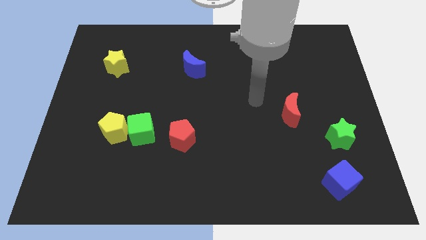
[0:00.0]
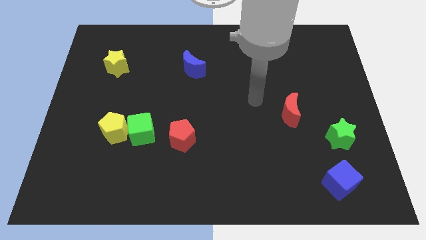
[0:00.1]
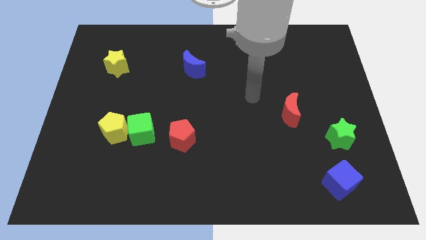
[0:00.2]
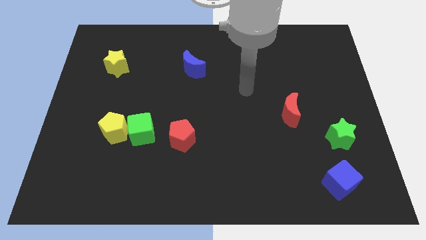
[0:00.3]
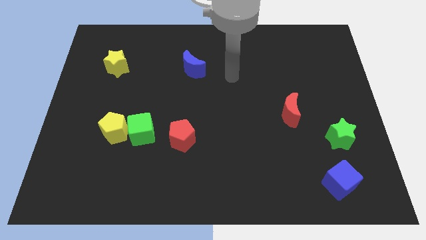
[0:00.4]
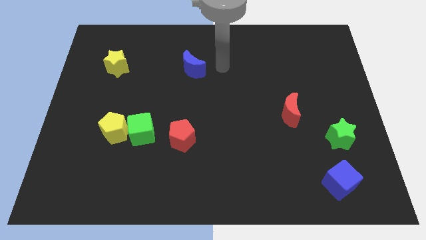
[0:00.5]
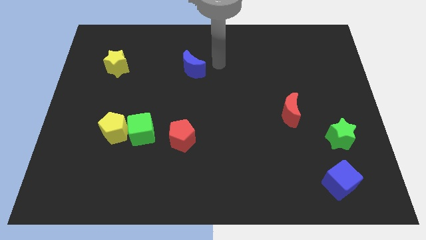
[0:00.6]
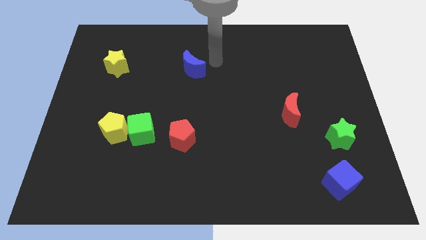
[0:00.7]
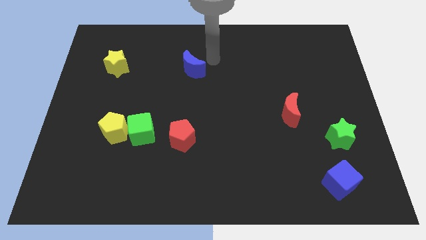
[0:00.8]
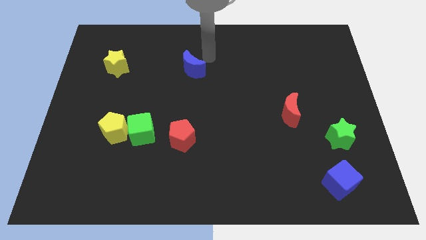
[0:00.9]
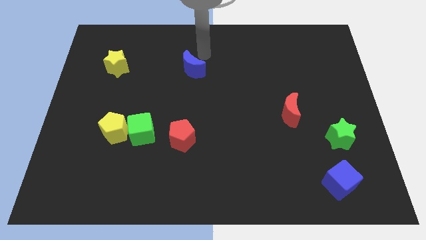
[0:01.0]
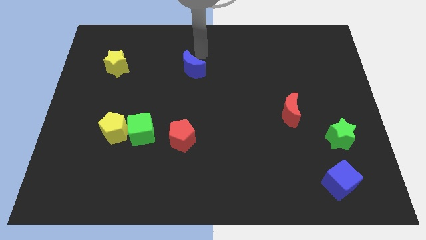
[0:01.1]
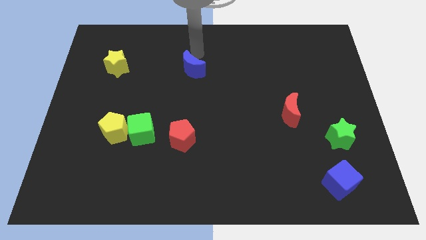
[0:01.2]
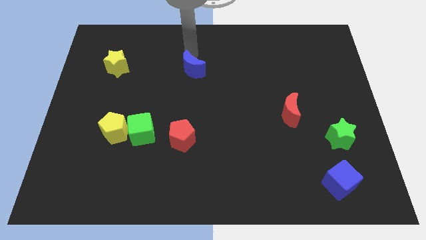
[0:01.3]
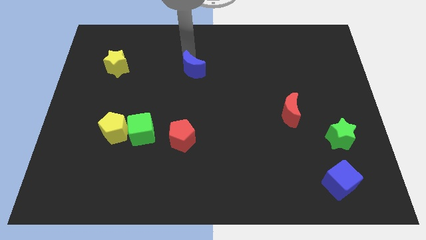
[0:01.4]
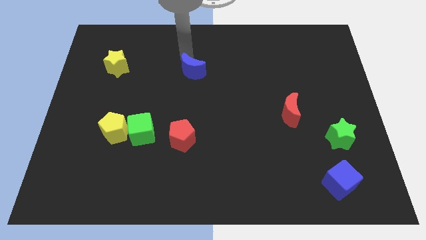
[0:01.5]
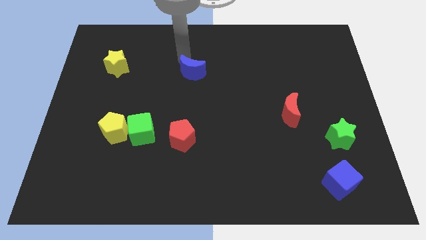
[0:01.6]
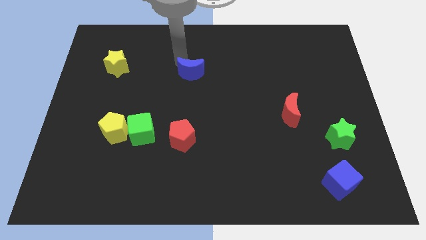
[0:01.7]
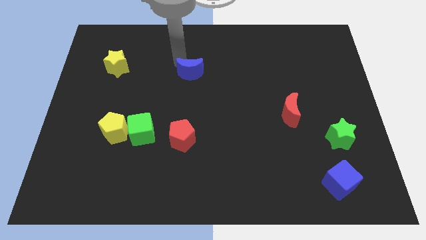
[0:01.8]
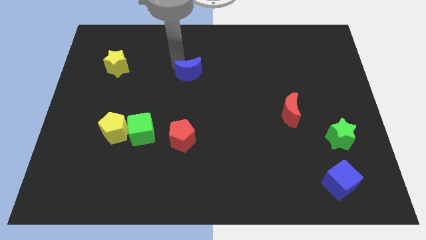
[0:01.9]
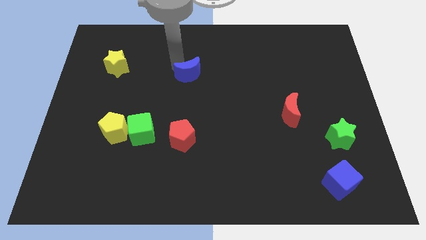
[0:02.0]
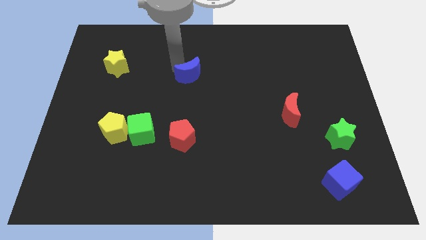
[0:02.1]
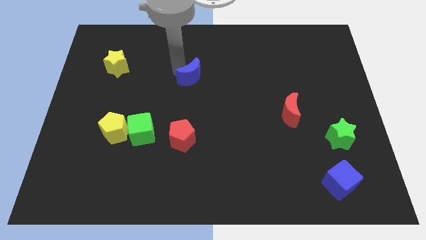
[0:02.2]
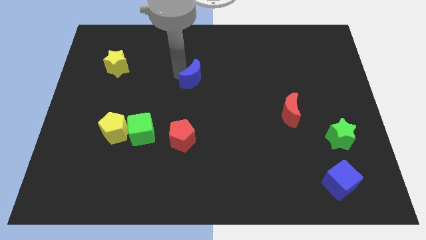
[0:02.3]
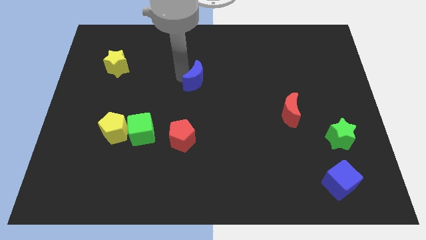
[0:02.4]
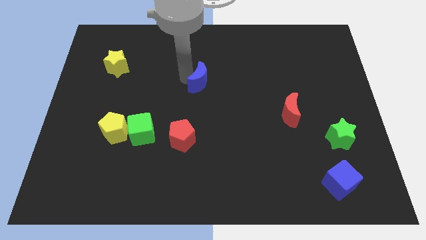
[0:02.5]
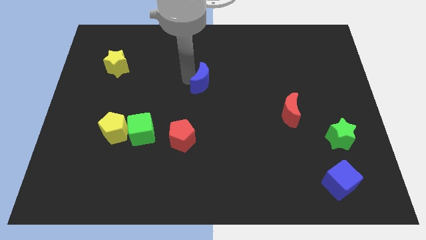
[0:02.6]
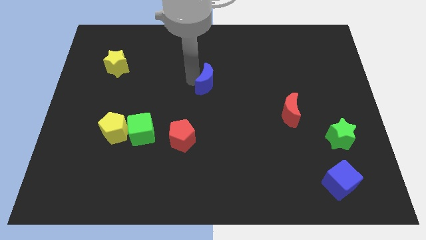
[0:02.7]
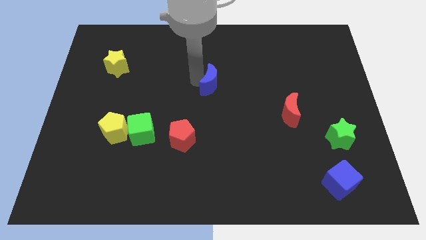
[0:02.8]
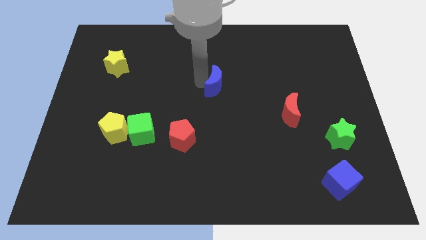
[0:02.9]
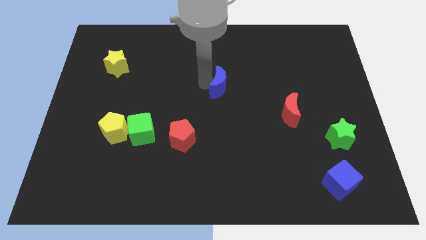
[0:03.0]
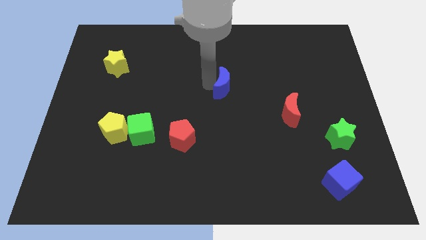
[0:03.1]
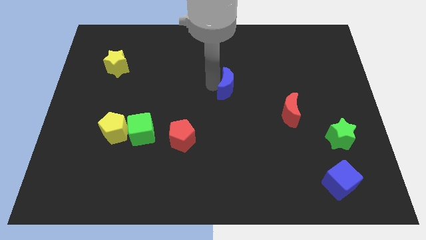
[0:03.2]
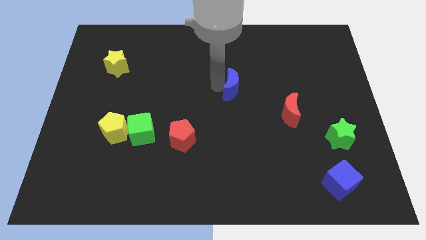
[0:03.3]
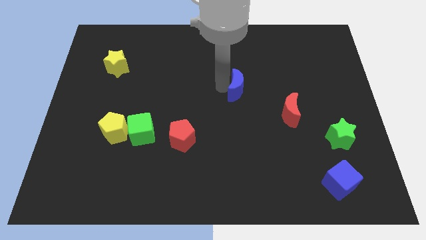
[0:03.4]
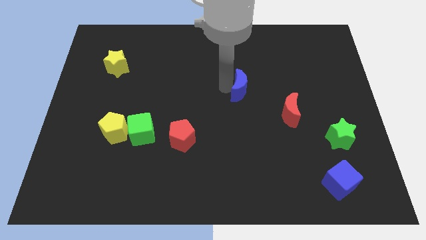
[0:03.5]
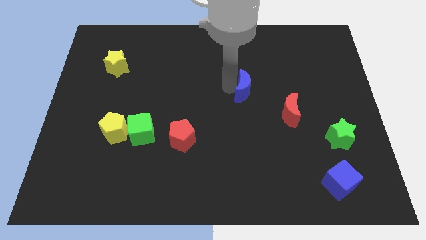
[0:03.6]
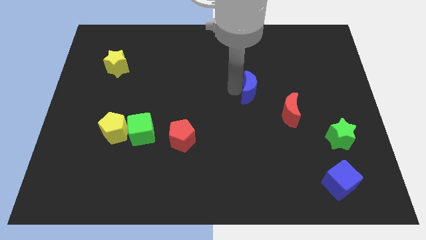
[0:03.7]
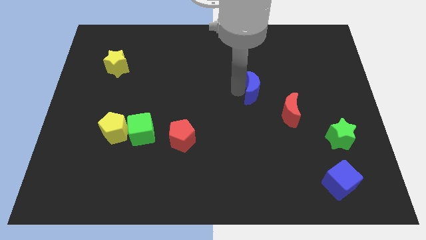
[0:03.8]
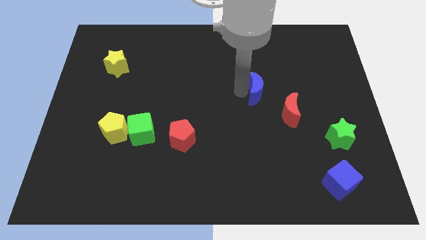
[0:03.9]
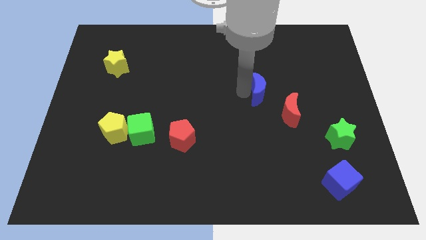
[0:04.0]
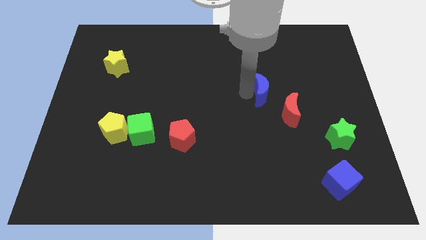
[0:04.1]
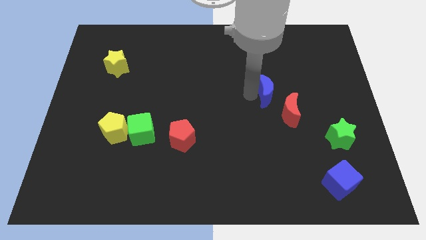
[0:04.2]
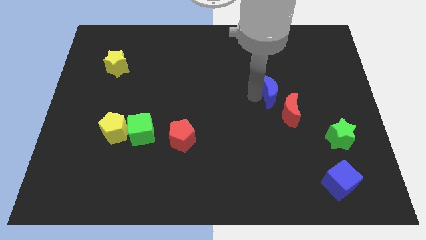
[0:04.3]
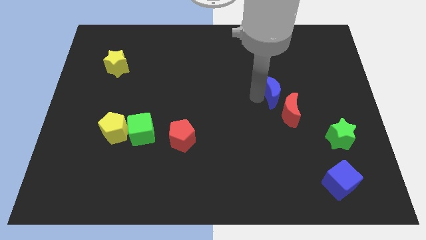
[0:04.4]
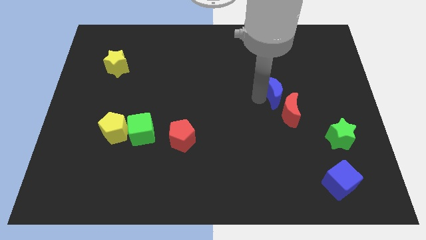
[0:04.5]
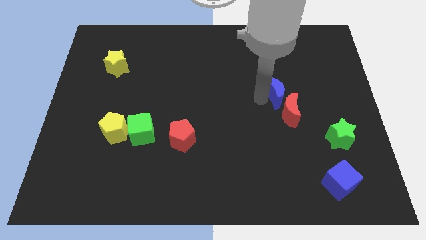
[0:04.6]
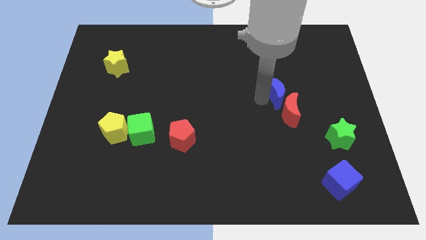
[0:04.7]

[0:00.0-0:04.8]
push the blue moon close to the red moon

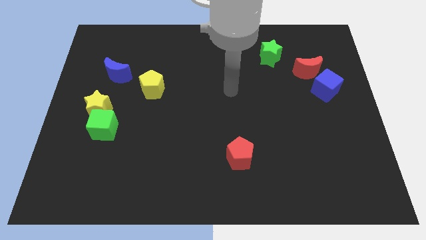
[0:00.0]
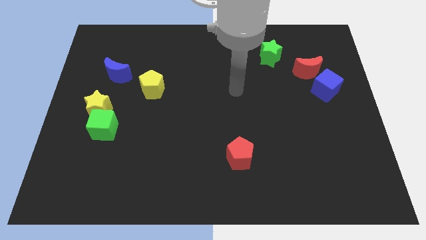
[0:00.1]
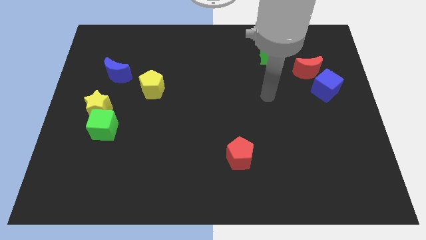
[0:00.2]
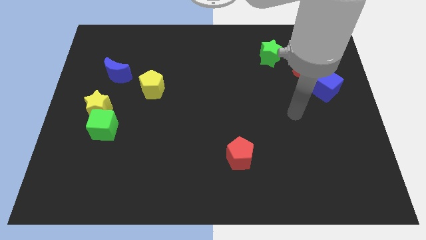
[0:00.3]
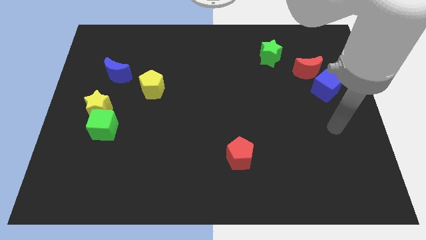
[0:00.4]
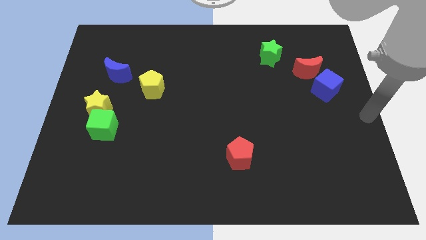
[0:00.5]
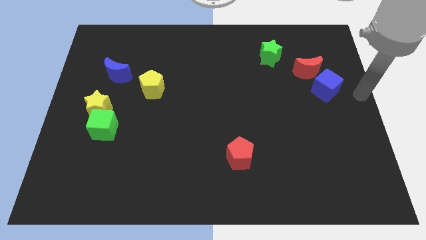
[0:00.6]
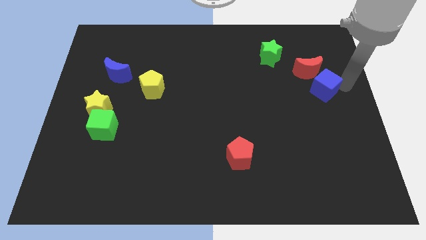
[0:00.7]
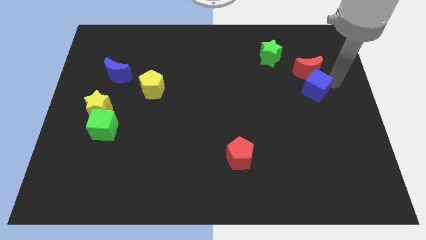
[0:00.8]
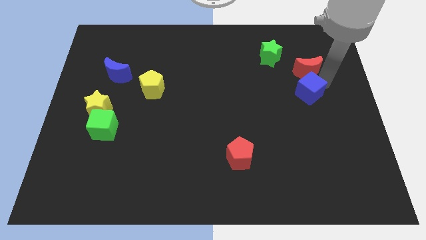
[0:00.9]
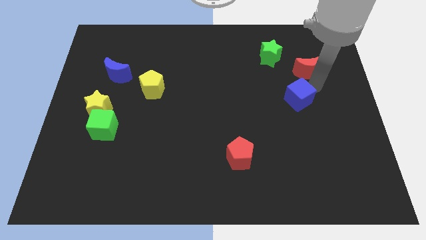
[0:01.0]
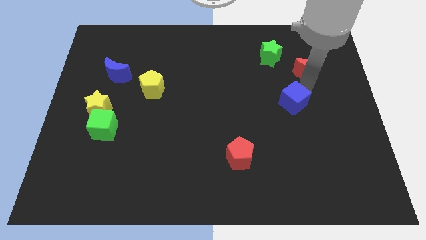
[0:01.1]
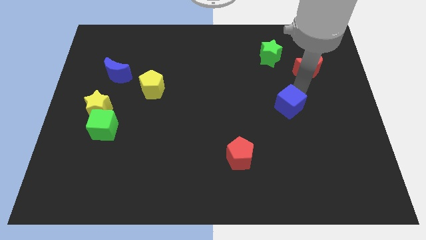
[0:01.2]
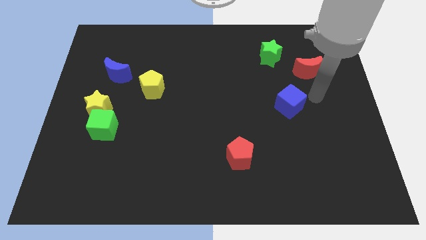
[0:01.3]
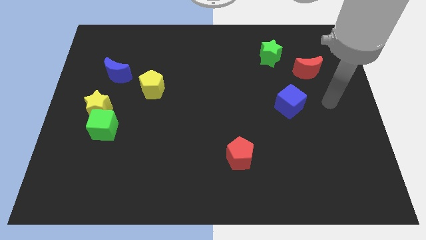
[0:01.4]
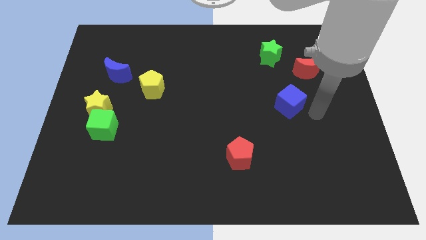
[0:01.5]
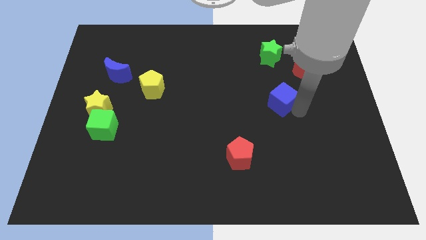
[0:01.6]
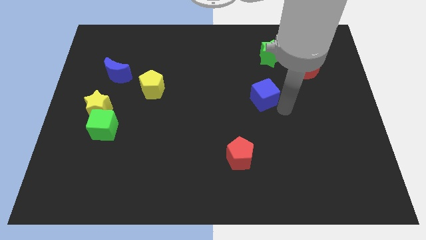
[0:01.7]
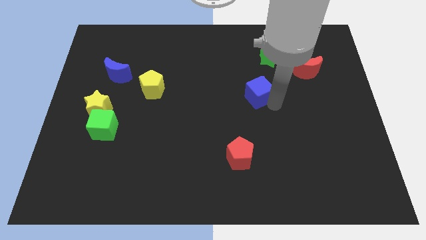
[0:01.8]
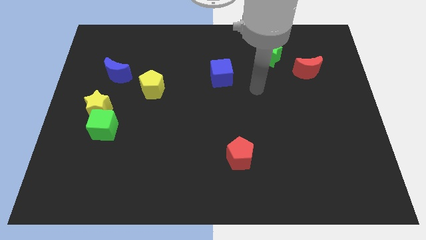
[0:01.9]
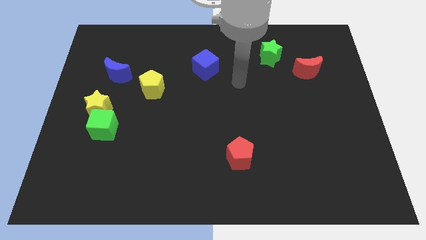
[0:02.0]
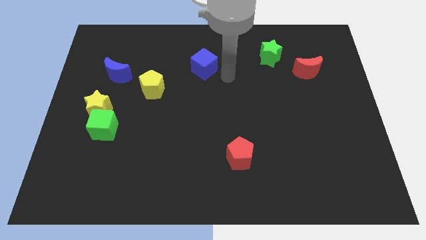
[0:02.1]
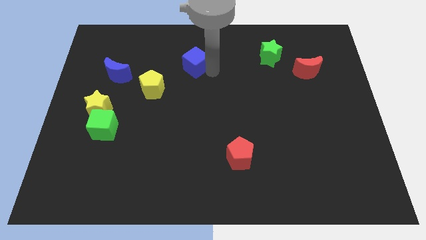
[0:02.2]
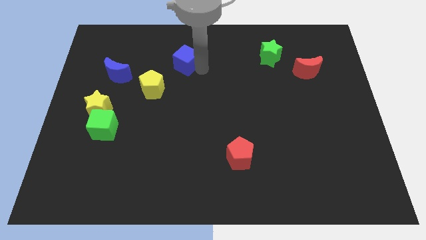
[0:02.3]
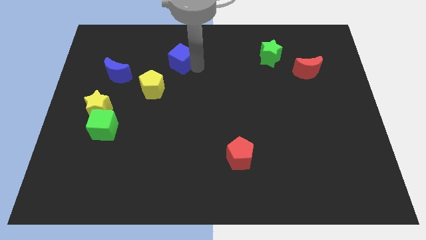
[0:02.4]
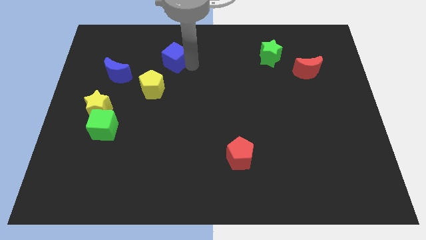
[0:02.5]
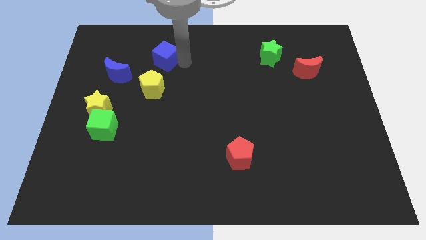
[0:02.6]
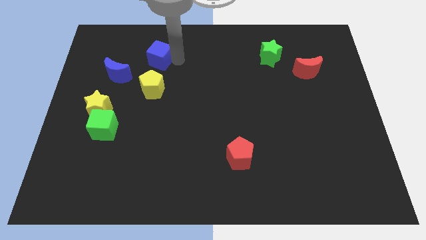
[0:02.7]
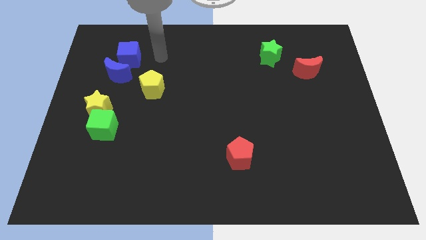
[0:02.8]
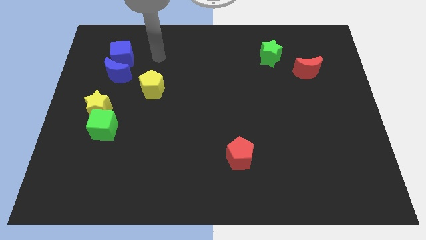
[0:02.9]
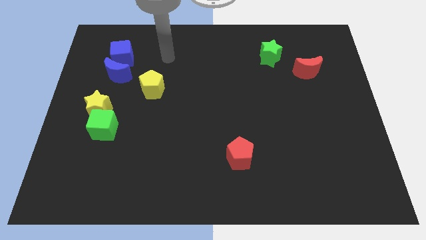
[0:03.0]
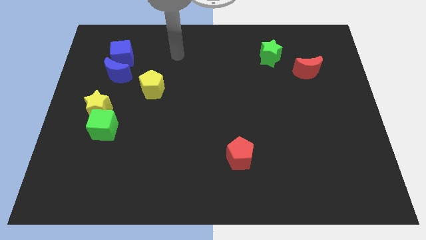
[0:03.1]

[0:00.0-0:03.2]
push the blue cube next to the blue moon

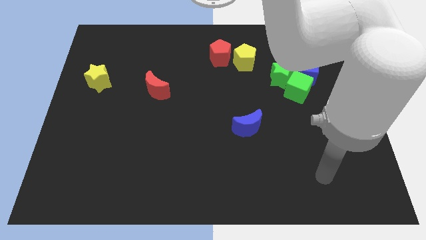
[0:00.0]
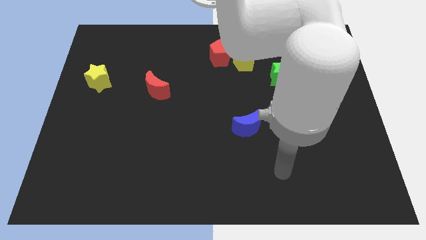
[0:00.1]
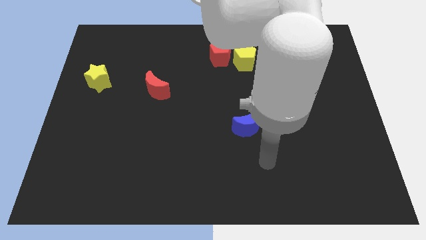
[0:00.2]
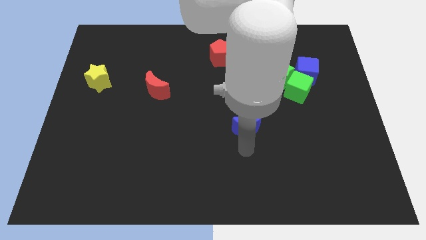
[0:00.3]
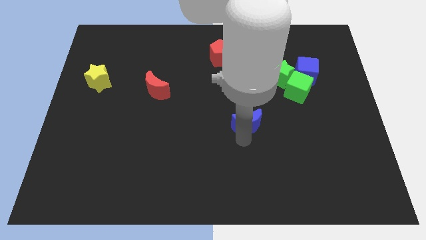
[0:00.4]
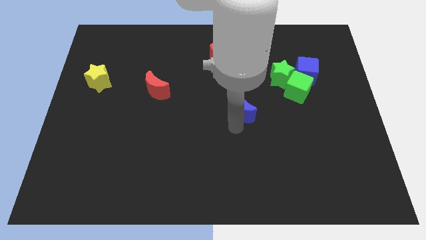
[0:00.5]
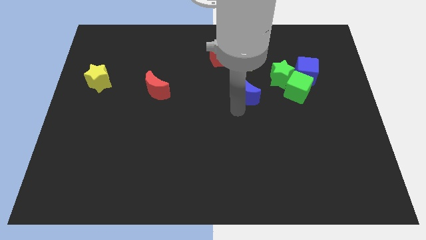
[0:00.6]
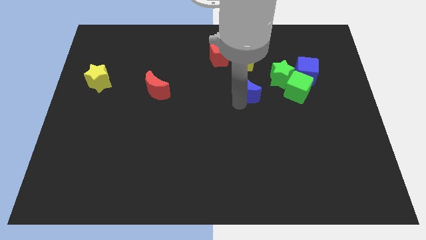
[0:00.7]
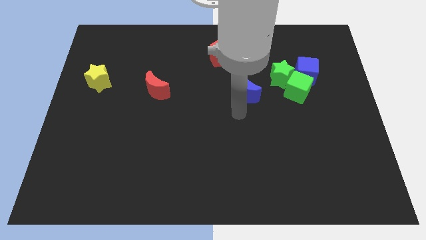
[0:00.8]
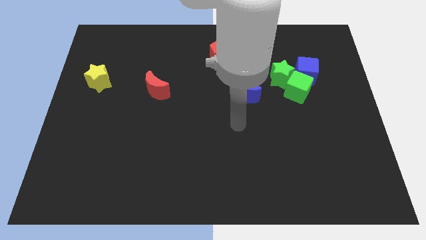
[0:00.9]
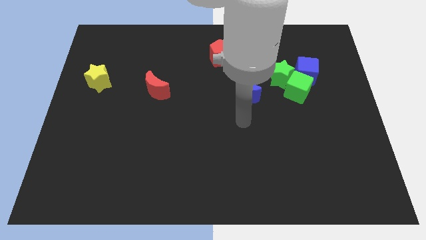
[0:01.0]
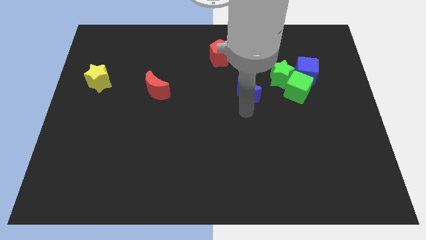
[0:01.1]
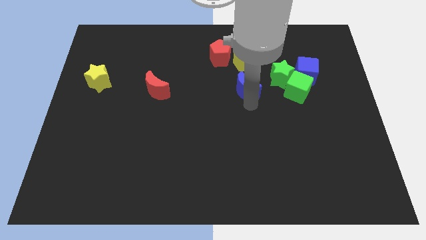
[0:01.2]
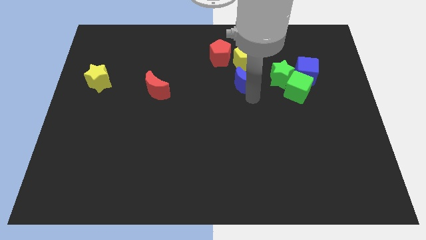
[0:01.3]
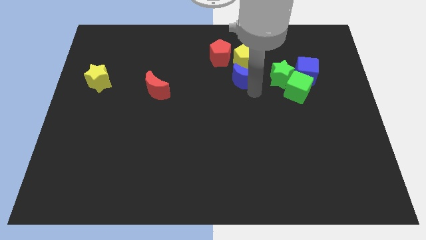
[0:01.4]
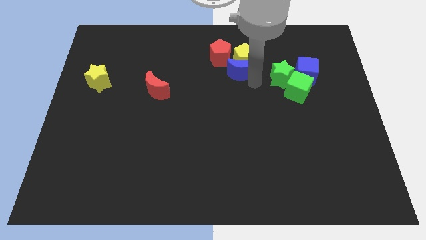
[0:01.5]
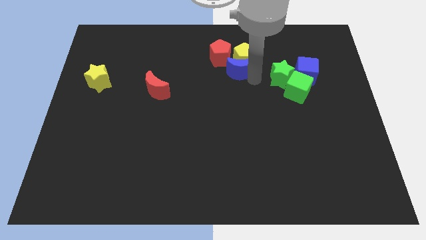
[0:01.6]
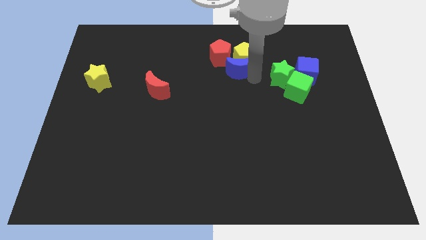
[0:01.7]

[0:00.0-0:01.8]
put the blue moon towards the yellow pentagon
